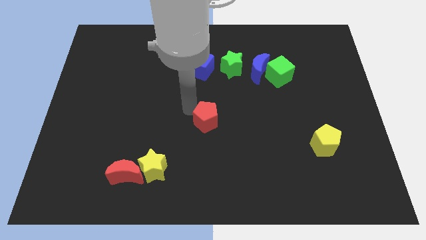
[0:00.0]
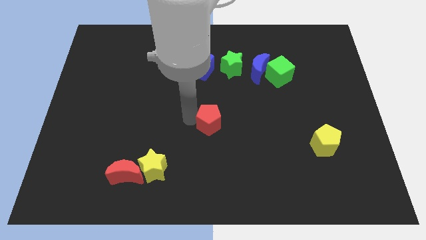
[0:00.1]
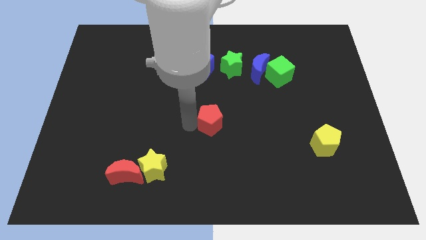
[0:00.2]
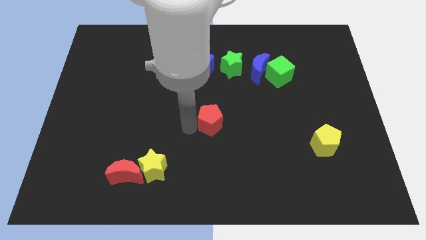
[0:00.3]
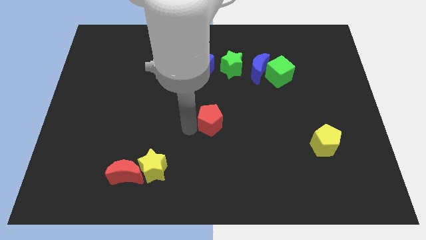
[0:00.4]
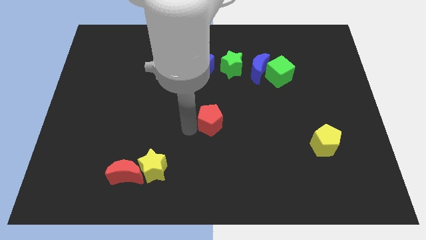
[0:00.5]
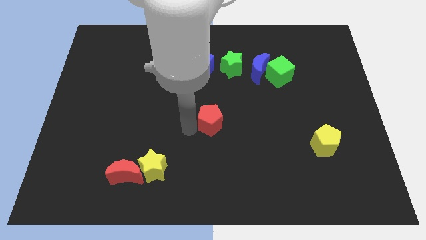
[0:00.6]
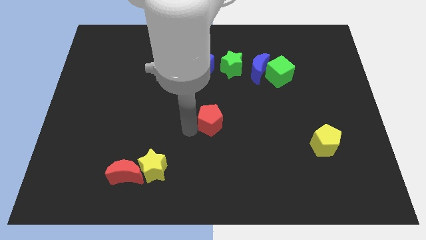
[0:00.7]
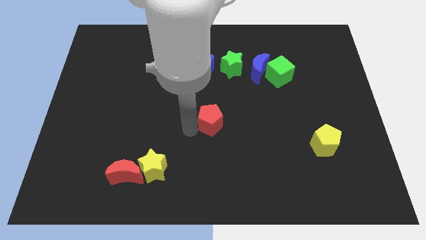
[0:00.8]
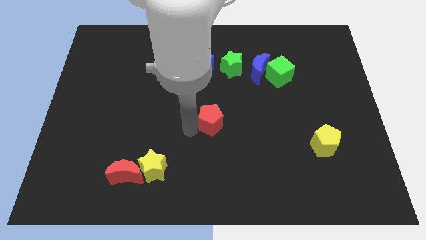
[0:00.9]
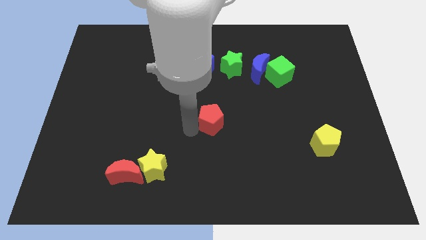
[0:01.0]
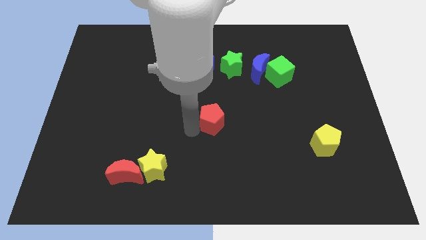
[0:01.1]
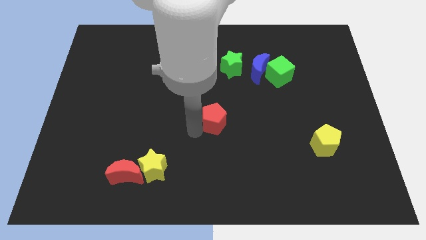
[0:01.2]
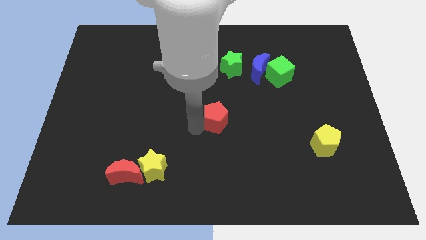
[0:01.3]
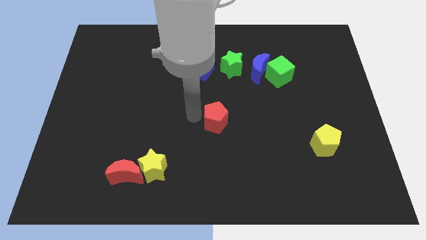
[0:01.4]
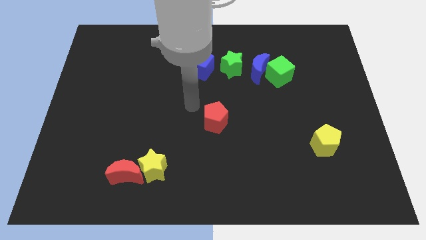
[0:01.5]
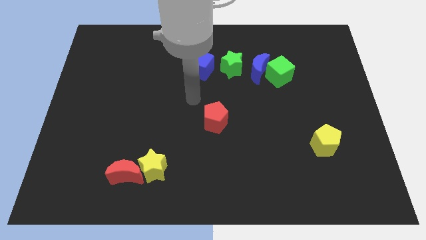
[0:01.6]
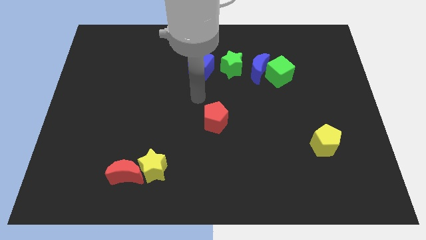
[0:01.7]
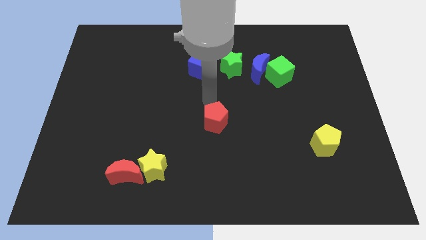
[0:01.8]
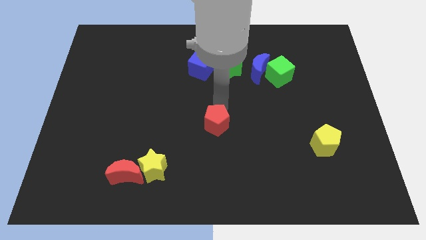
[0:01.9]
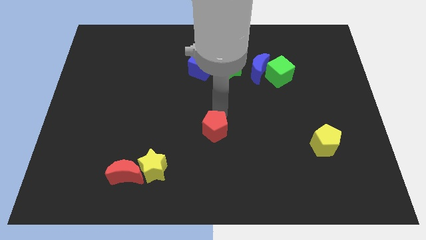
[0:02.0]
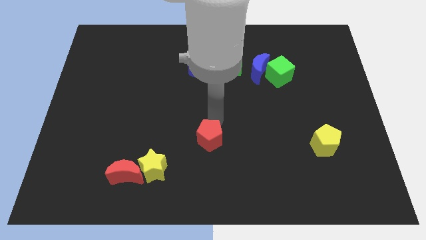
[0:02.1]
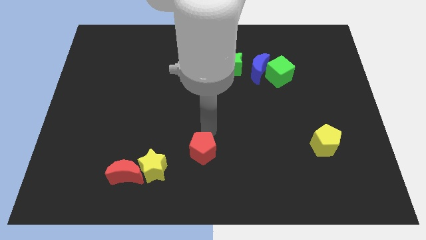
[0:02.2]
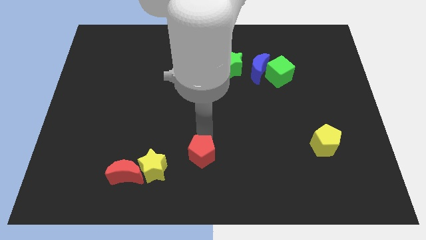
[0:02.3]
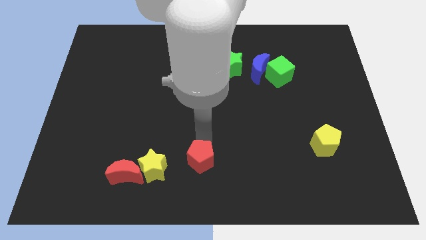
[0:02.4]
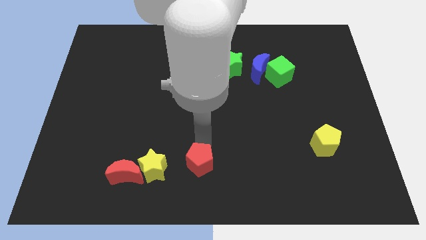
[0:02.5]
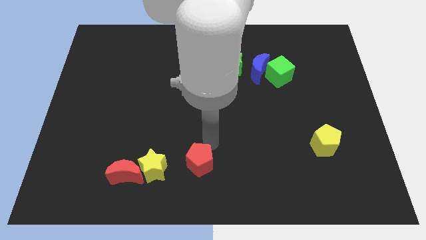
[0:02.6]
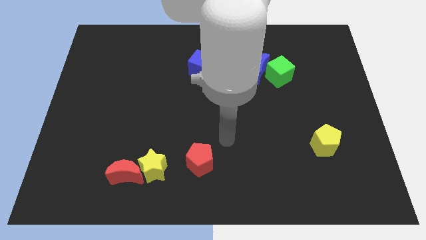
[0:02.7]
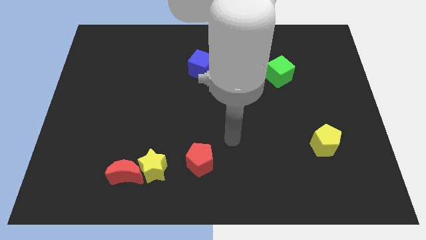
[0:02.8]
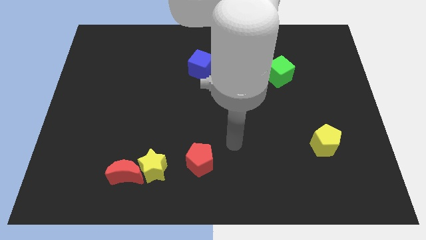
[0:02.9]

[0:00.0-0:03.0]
push the red pentagon to the bottom

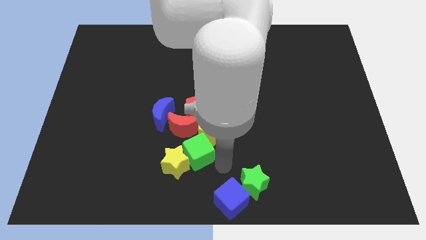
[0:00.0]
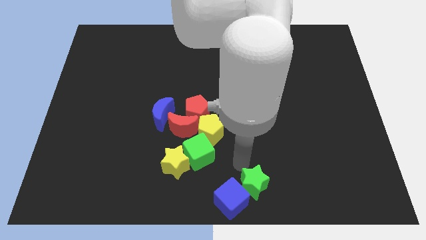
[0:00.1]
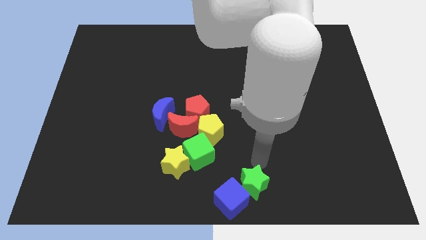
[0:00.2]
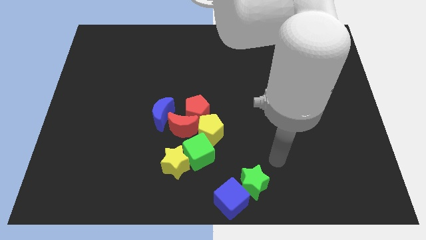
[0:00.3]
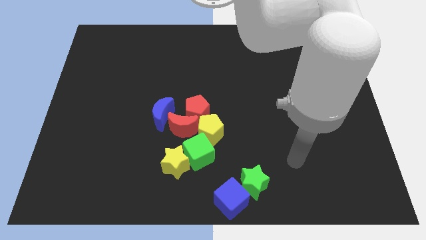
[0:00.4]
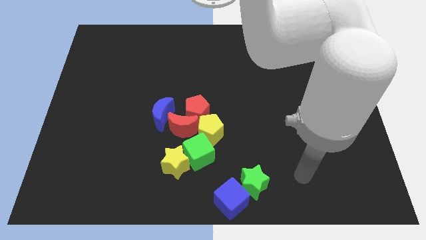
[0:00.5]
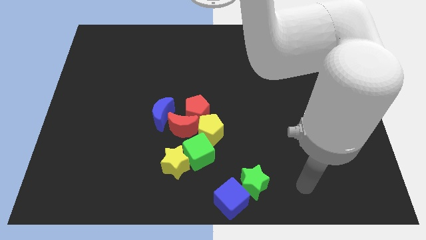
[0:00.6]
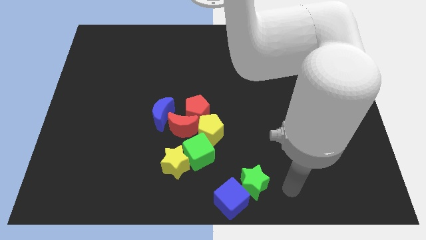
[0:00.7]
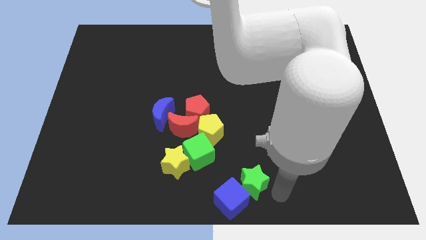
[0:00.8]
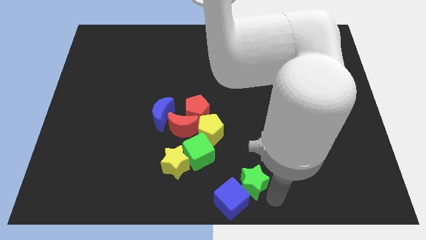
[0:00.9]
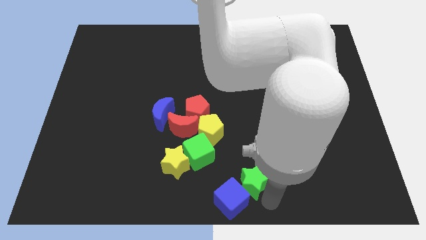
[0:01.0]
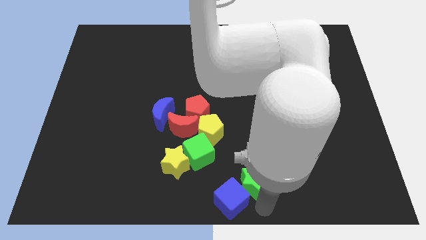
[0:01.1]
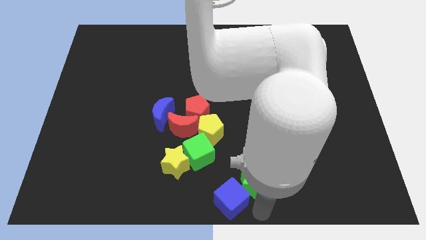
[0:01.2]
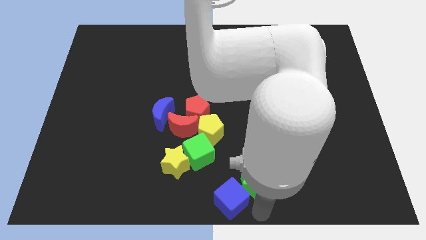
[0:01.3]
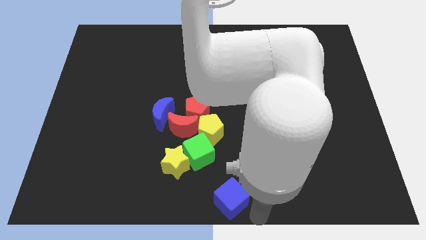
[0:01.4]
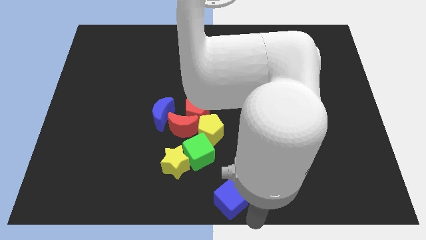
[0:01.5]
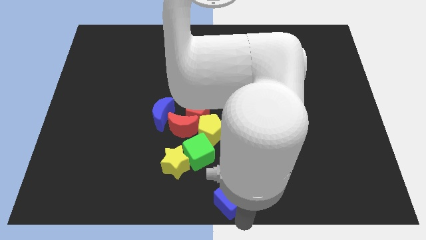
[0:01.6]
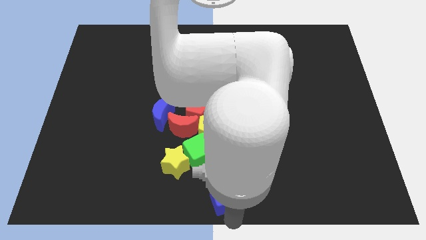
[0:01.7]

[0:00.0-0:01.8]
move your hand towards the bottom of the blue cube

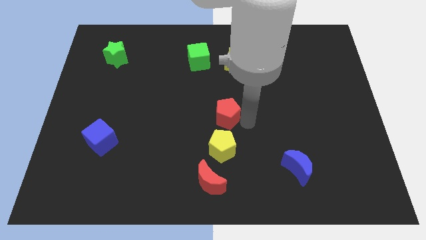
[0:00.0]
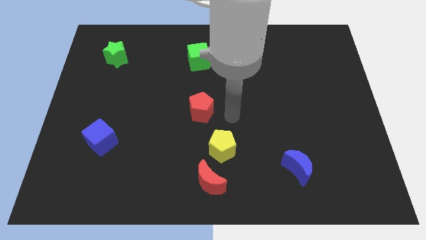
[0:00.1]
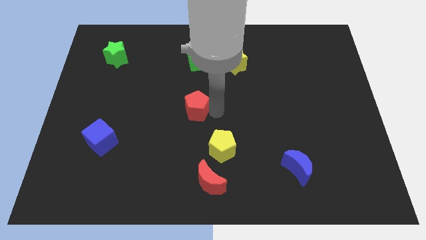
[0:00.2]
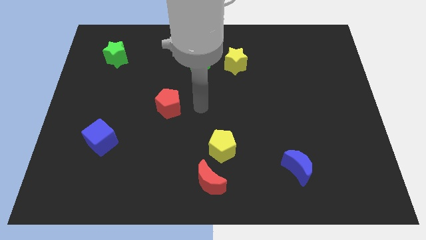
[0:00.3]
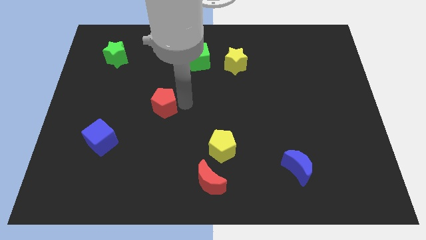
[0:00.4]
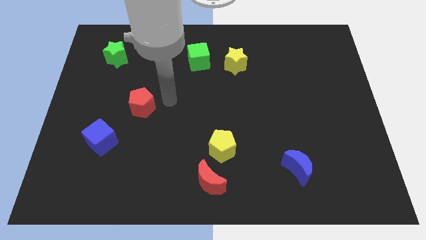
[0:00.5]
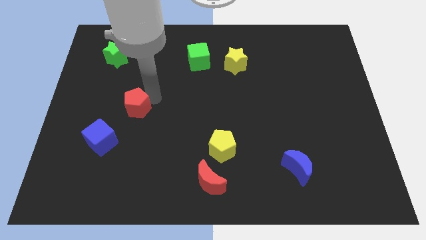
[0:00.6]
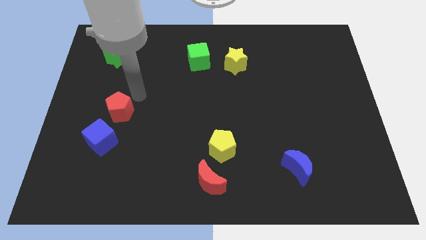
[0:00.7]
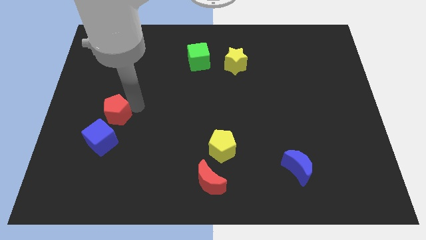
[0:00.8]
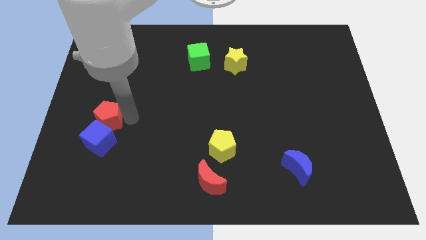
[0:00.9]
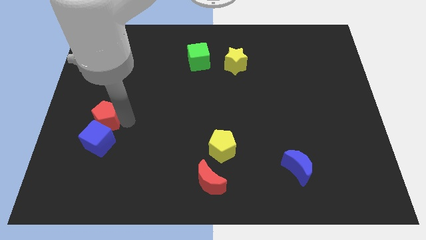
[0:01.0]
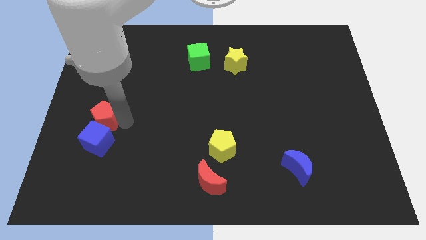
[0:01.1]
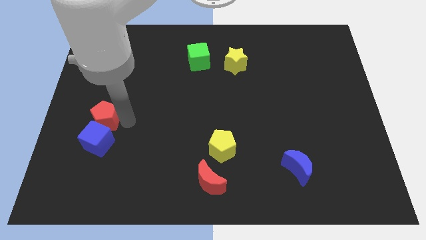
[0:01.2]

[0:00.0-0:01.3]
push the red pentagon into the blue cube

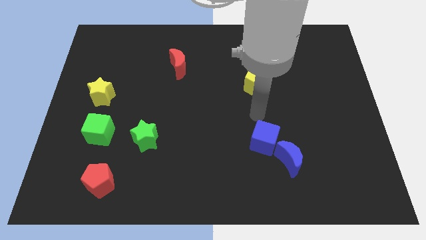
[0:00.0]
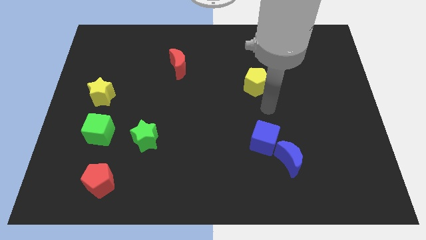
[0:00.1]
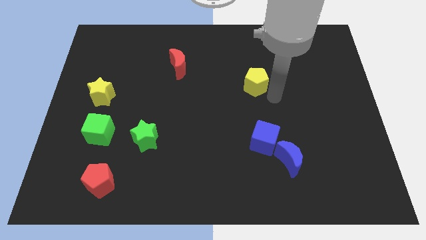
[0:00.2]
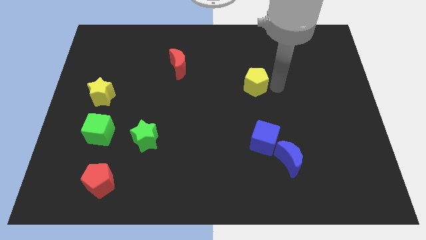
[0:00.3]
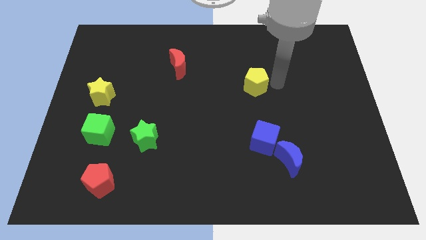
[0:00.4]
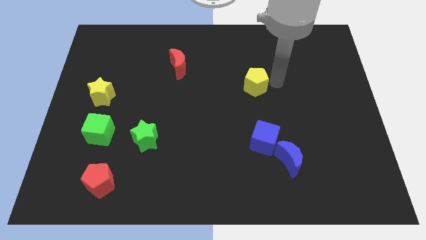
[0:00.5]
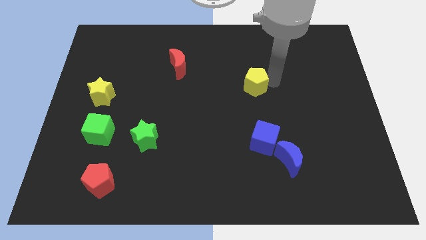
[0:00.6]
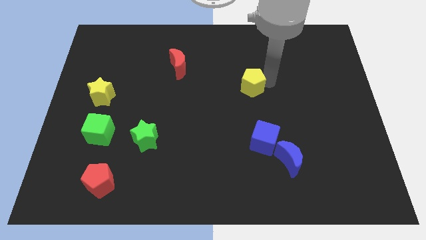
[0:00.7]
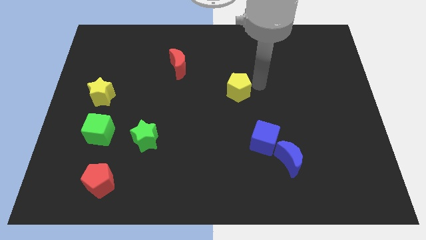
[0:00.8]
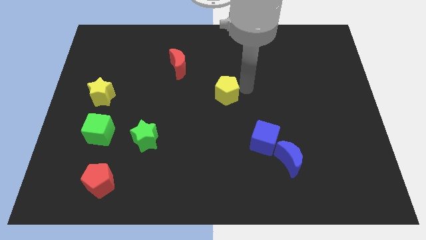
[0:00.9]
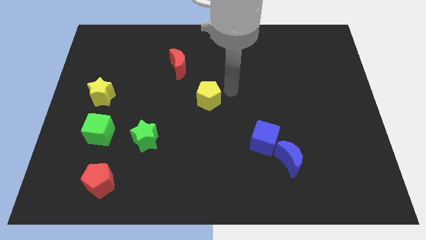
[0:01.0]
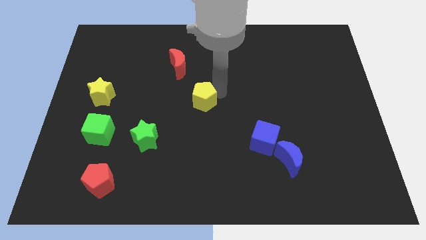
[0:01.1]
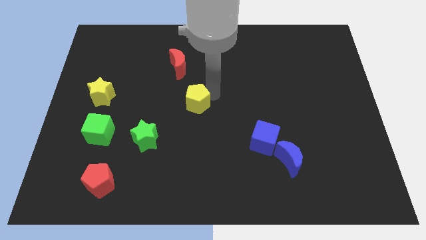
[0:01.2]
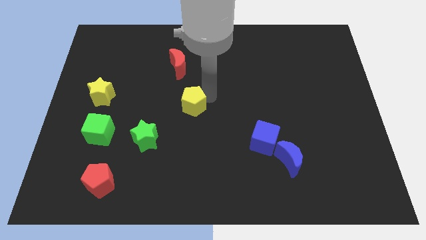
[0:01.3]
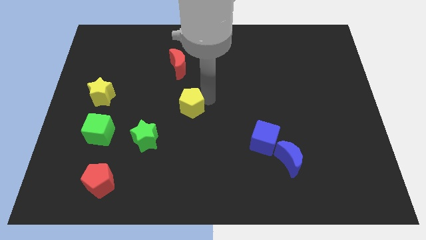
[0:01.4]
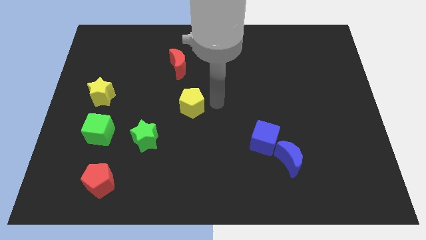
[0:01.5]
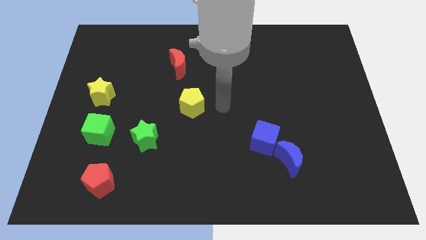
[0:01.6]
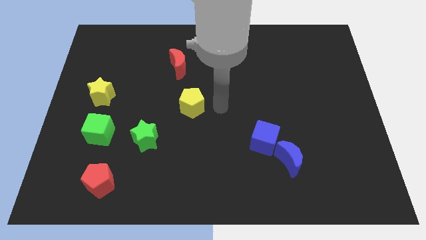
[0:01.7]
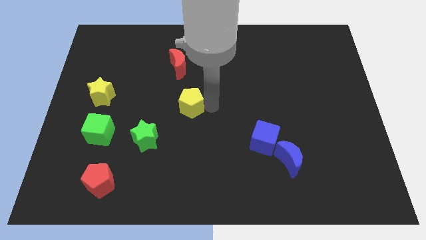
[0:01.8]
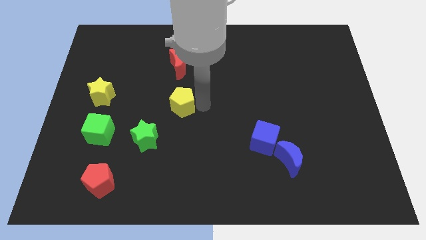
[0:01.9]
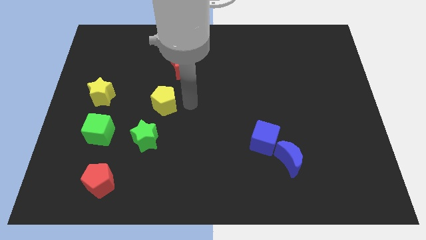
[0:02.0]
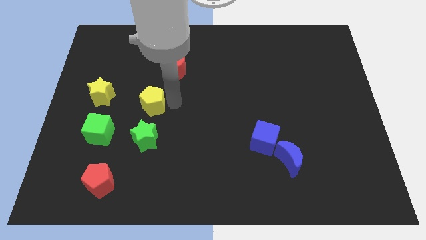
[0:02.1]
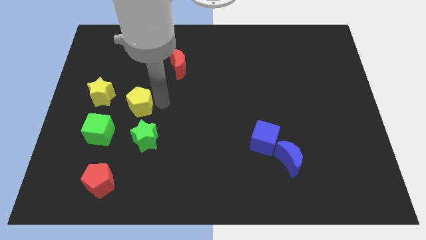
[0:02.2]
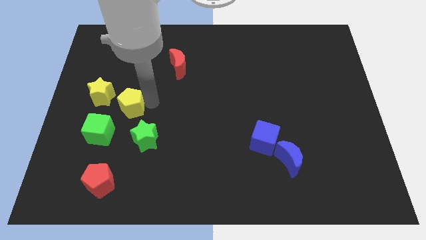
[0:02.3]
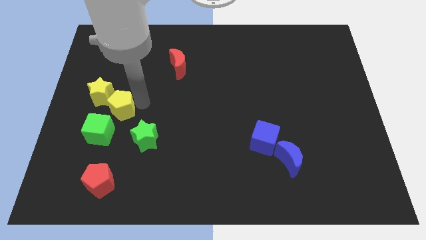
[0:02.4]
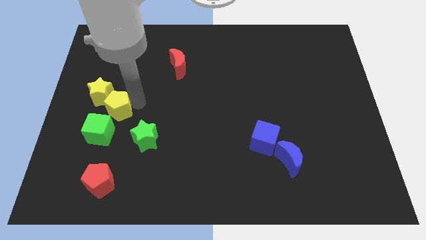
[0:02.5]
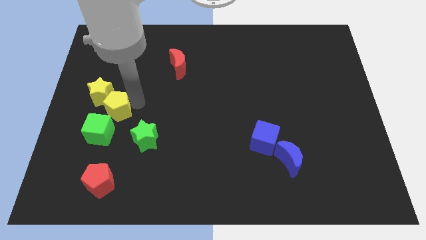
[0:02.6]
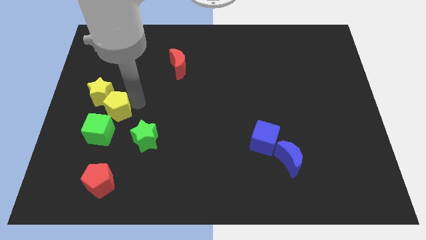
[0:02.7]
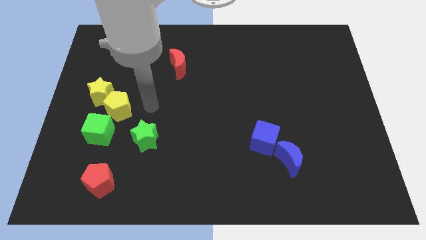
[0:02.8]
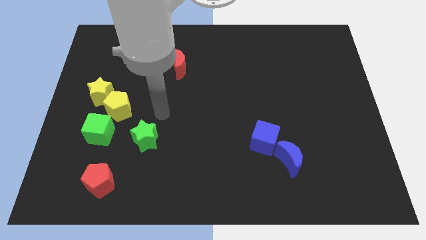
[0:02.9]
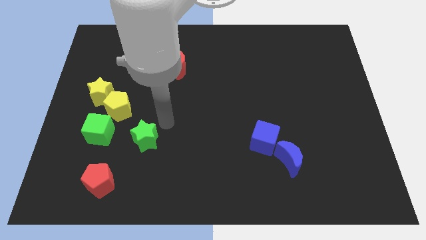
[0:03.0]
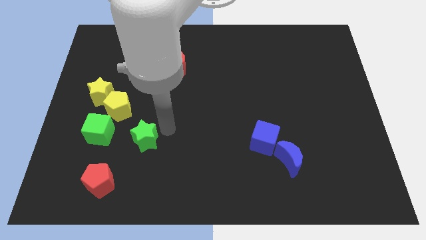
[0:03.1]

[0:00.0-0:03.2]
put the yellow pentagon at the bottom right of the yellow star
